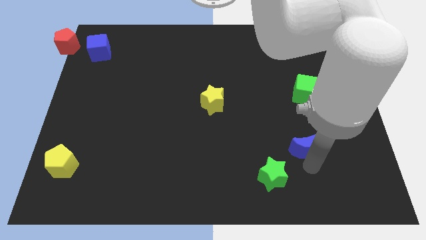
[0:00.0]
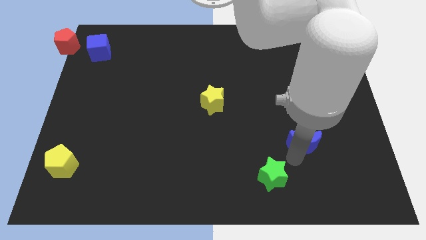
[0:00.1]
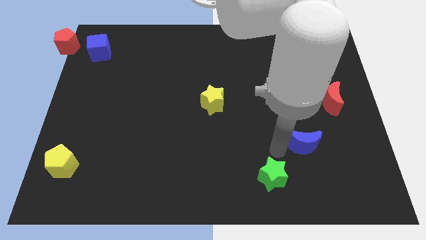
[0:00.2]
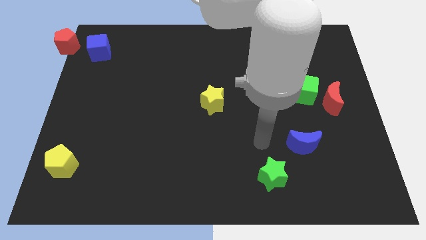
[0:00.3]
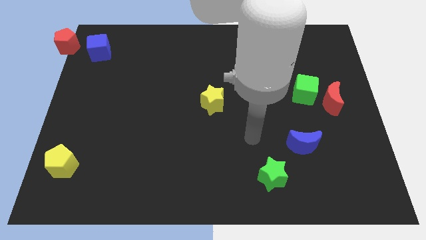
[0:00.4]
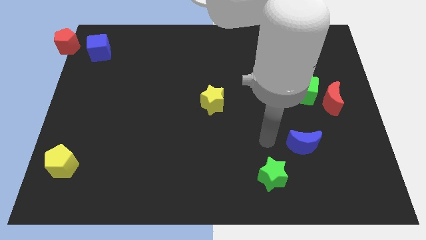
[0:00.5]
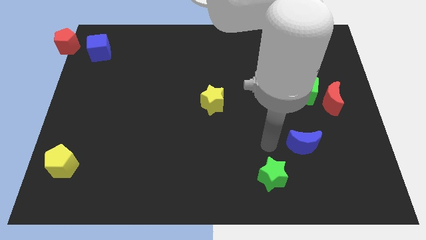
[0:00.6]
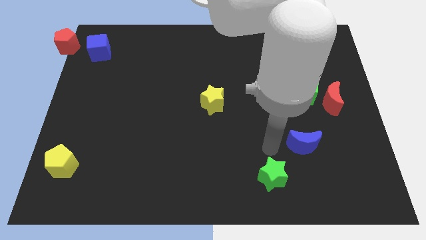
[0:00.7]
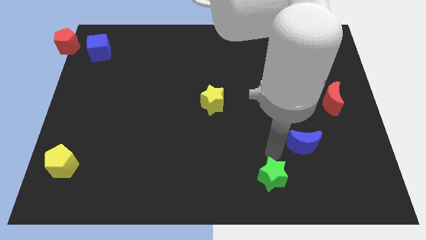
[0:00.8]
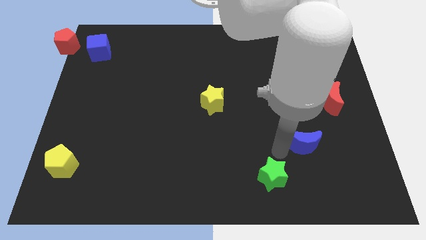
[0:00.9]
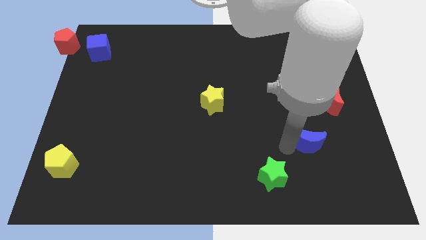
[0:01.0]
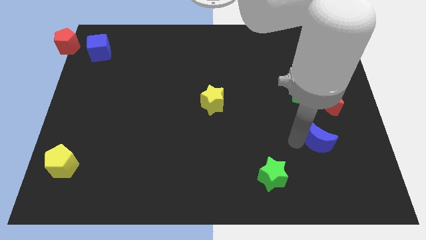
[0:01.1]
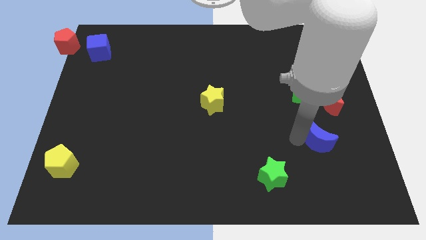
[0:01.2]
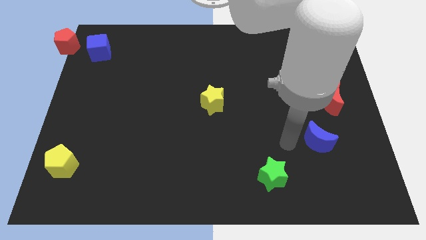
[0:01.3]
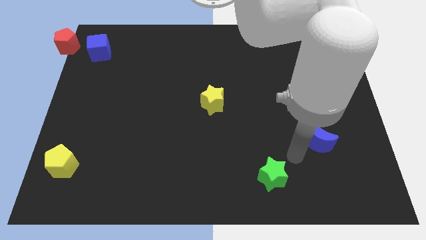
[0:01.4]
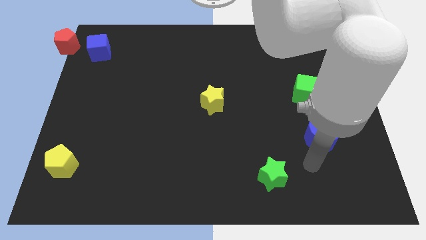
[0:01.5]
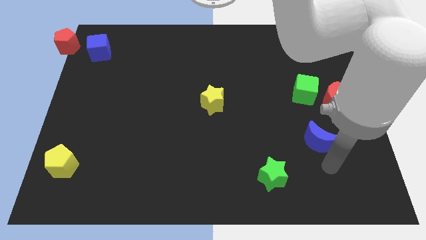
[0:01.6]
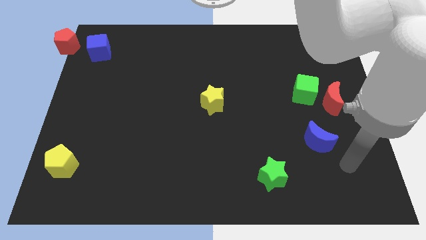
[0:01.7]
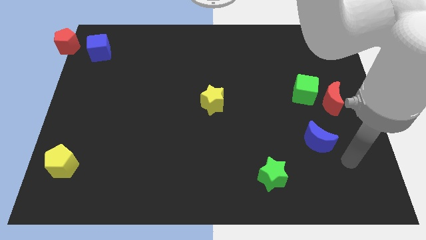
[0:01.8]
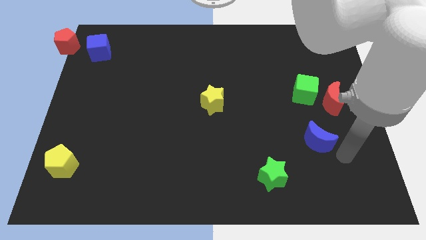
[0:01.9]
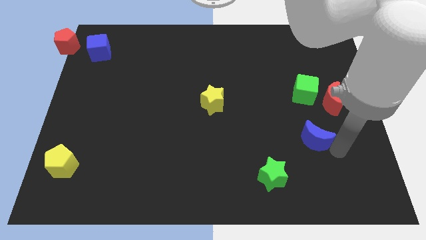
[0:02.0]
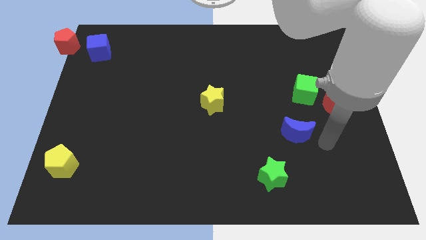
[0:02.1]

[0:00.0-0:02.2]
push blue crescent below green cube

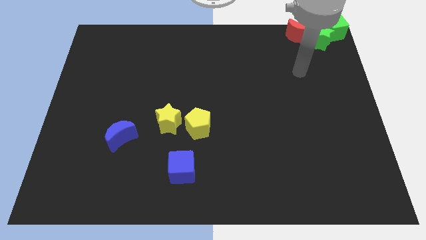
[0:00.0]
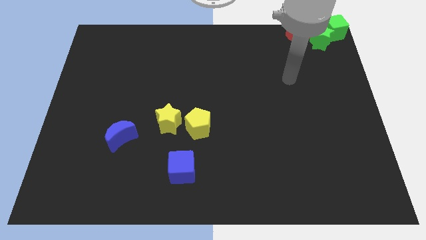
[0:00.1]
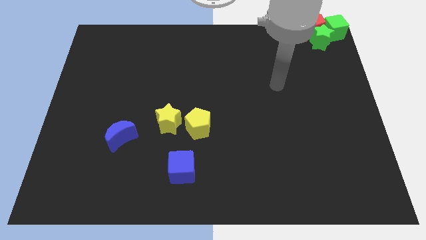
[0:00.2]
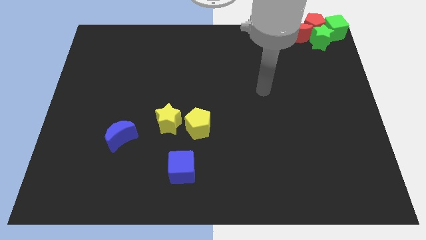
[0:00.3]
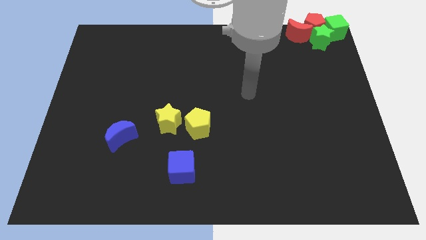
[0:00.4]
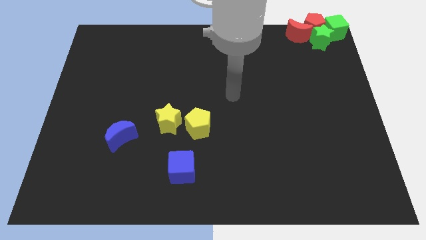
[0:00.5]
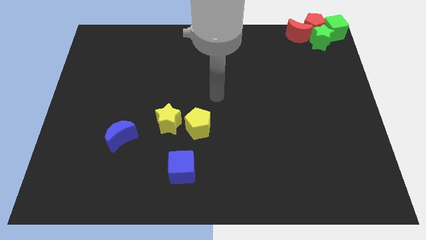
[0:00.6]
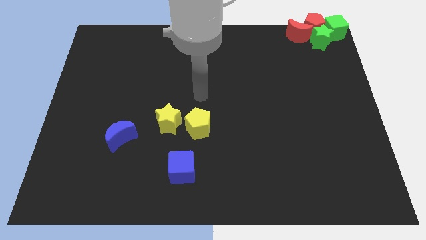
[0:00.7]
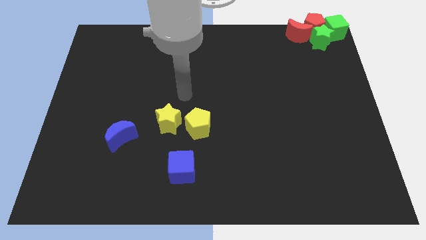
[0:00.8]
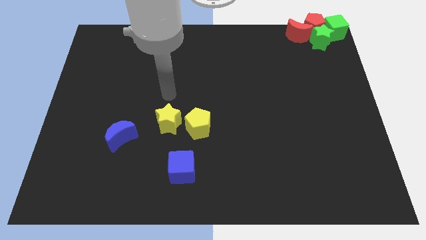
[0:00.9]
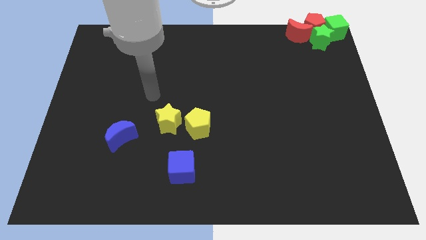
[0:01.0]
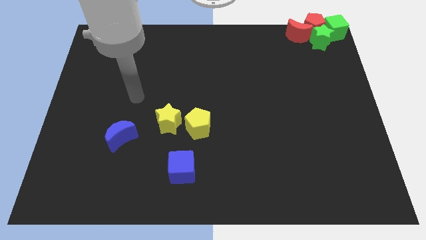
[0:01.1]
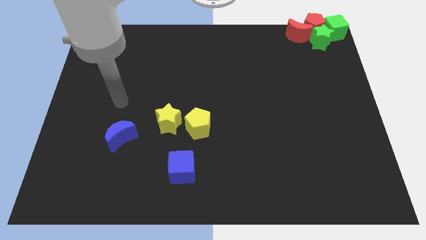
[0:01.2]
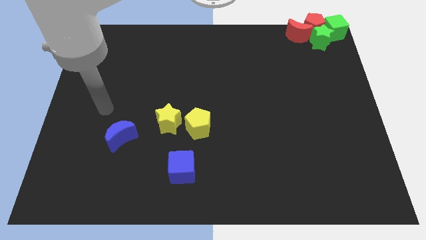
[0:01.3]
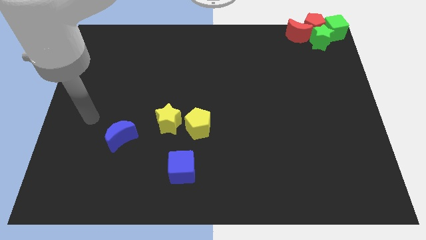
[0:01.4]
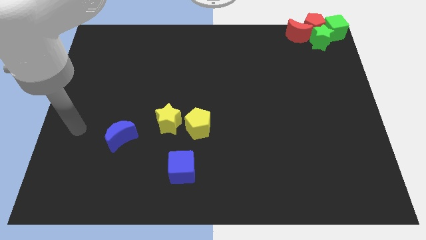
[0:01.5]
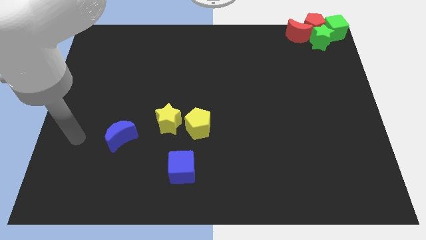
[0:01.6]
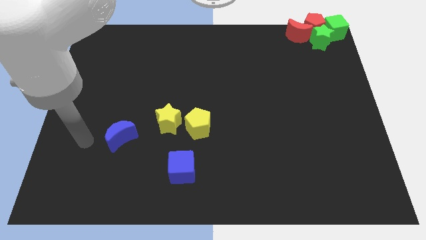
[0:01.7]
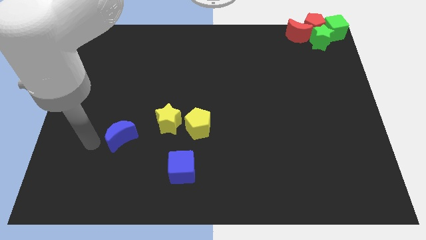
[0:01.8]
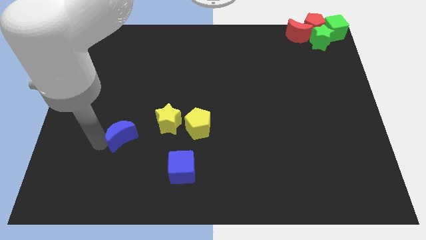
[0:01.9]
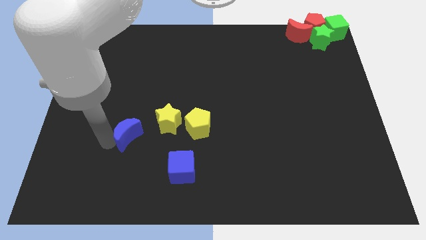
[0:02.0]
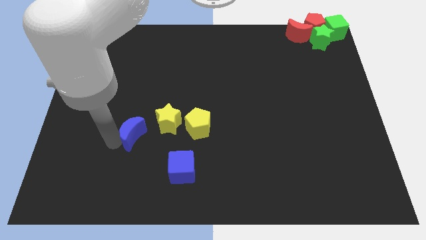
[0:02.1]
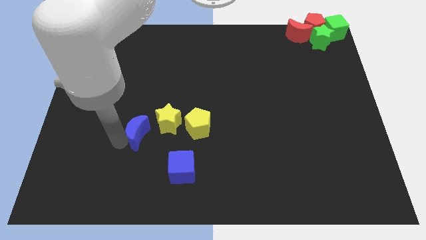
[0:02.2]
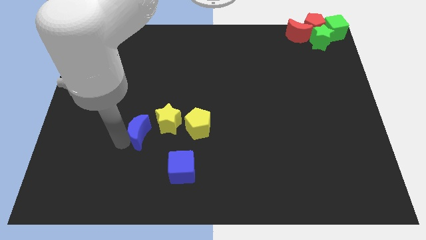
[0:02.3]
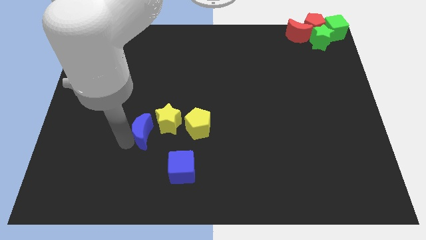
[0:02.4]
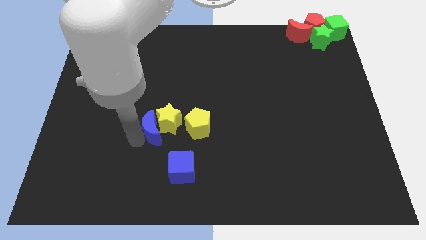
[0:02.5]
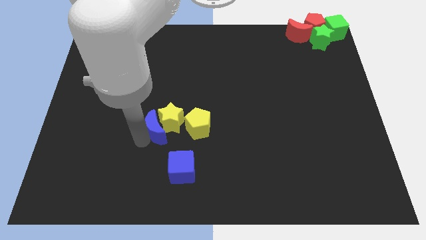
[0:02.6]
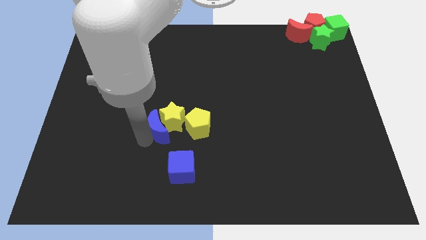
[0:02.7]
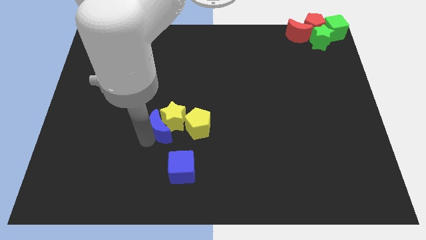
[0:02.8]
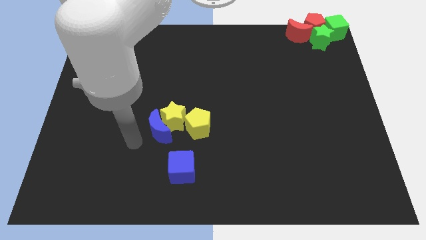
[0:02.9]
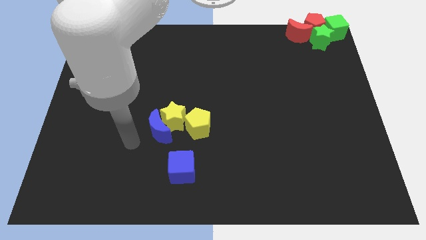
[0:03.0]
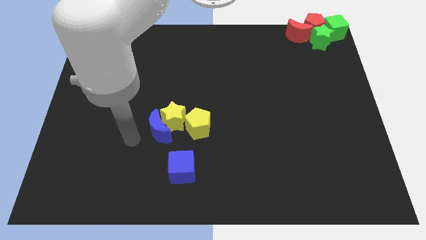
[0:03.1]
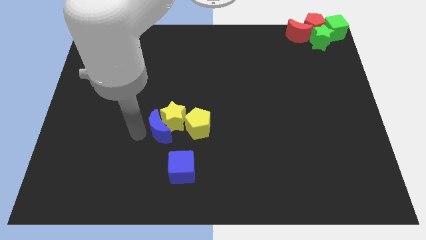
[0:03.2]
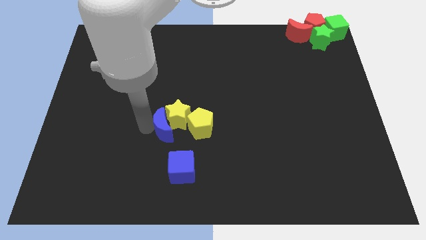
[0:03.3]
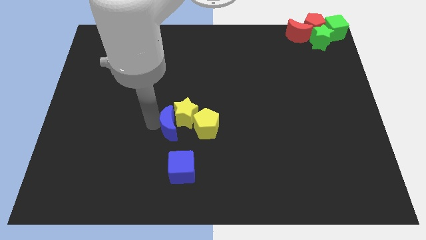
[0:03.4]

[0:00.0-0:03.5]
push blue moon in to yellow star

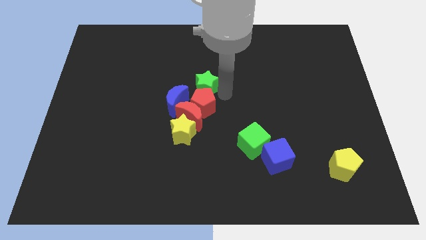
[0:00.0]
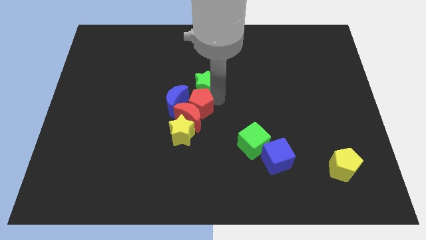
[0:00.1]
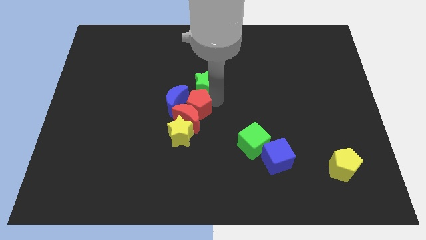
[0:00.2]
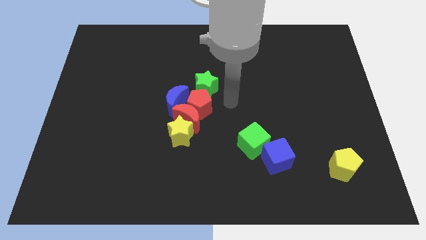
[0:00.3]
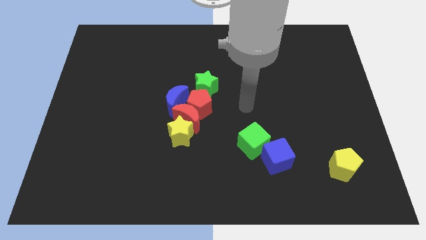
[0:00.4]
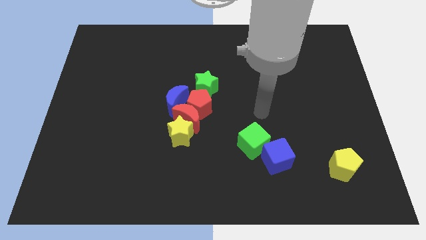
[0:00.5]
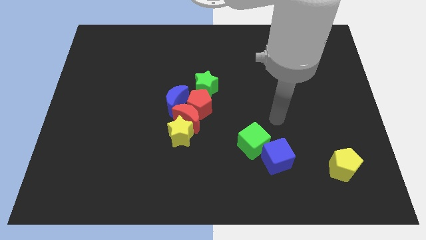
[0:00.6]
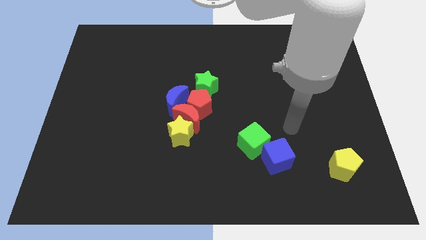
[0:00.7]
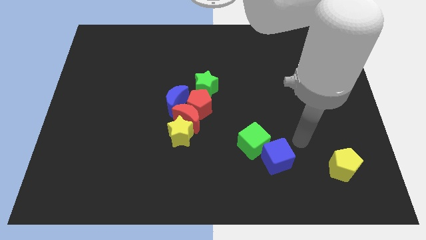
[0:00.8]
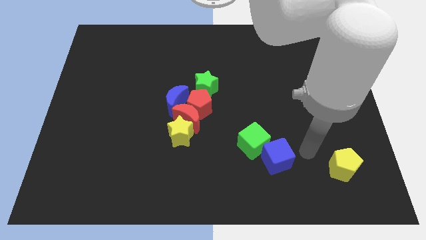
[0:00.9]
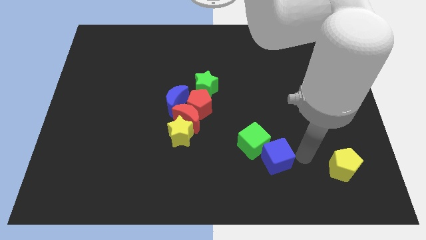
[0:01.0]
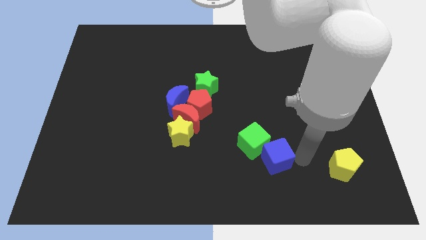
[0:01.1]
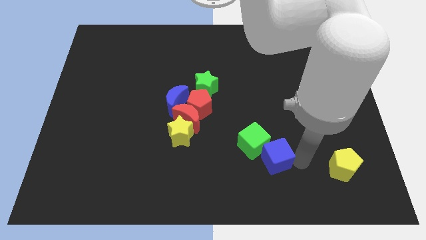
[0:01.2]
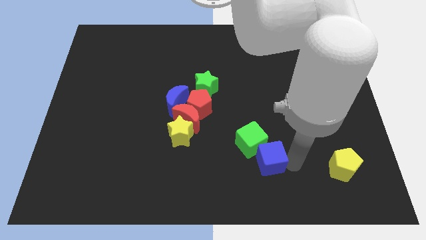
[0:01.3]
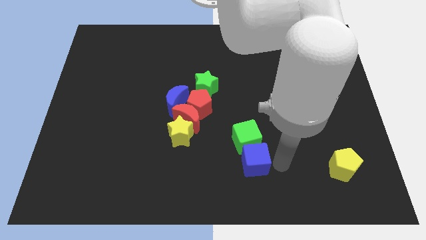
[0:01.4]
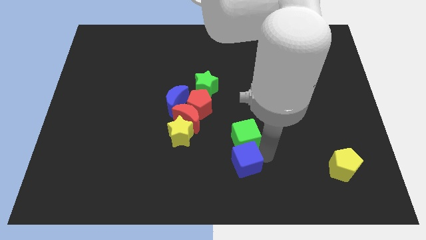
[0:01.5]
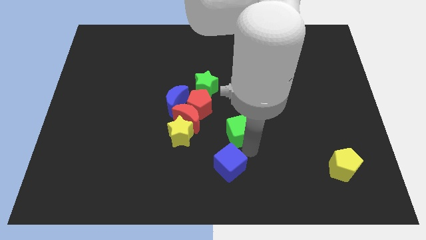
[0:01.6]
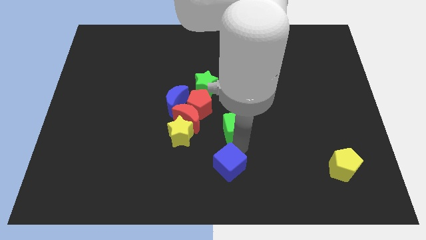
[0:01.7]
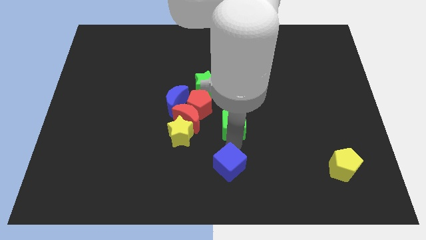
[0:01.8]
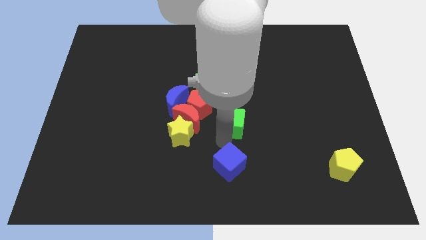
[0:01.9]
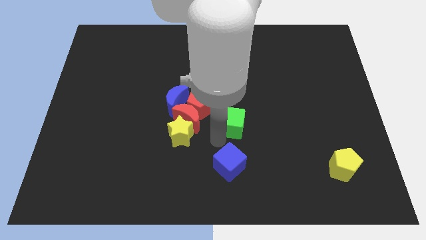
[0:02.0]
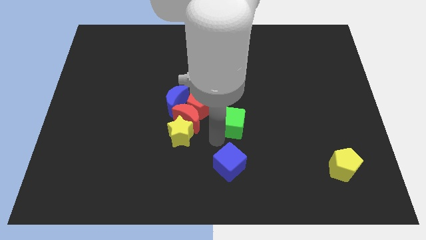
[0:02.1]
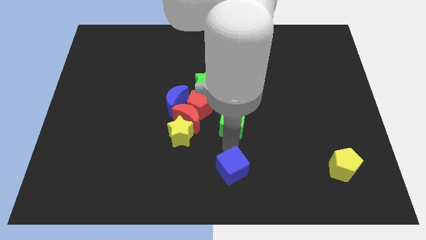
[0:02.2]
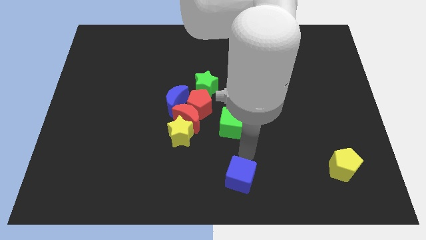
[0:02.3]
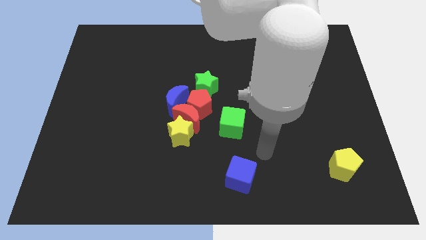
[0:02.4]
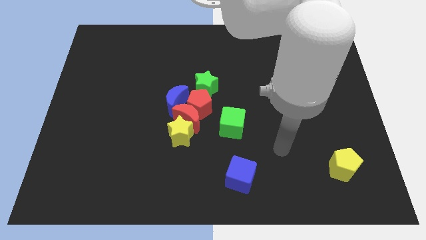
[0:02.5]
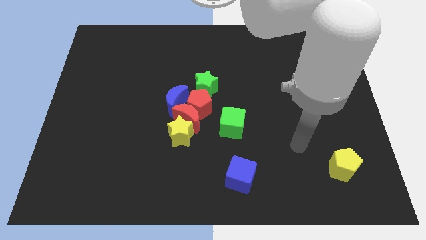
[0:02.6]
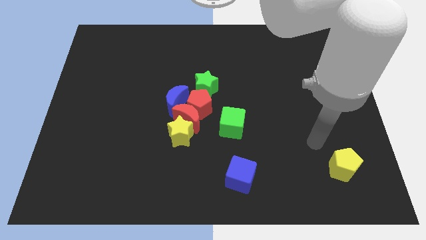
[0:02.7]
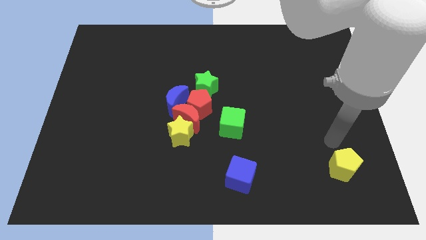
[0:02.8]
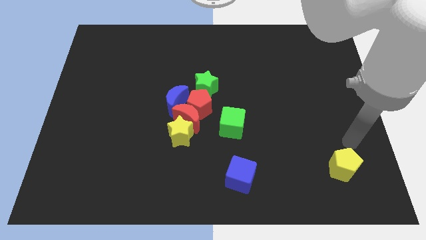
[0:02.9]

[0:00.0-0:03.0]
push the blue cube towards bottom side

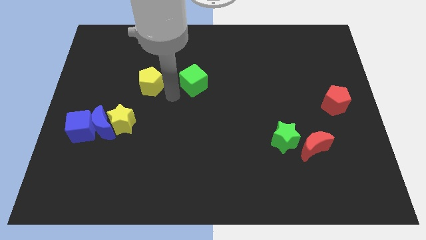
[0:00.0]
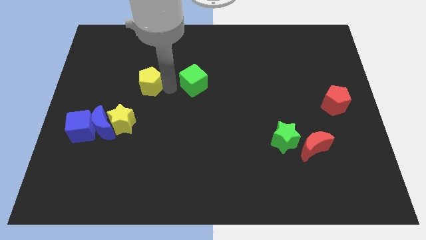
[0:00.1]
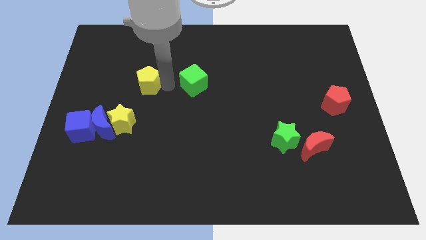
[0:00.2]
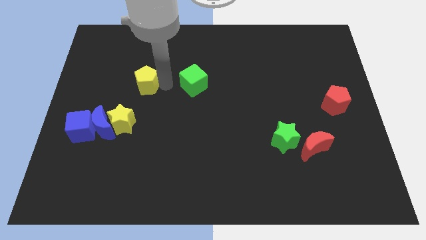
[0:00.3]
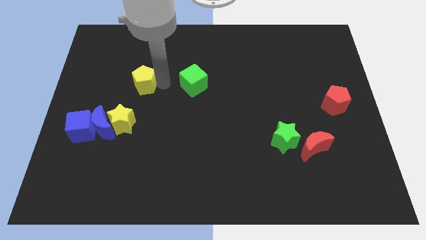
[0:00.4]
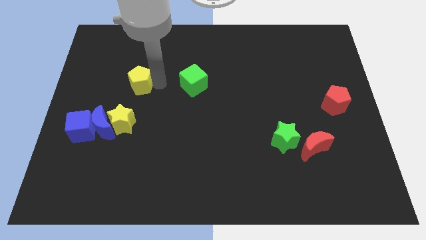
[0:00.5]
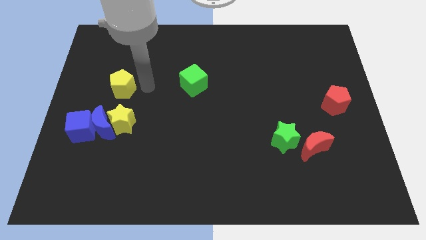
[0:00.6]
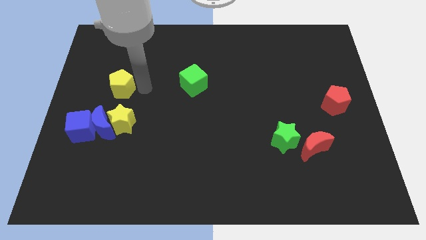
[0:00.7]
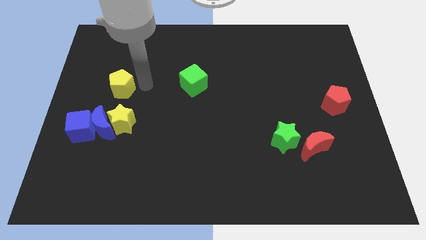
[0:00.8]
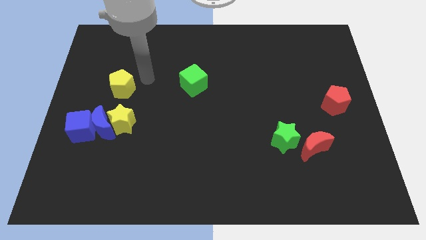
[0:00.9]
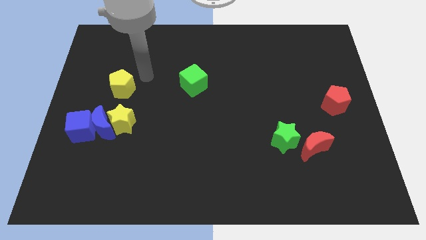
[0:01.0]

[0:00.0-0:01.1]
move the yellow pentagon above the yellow star
